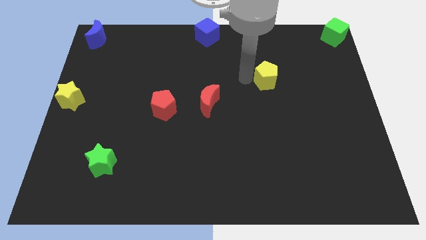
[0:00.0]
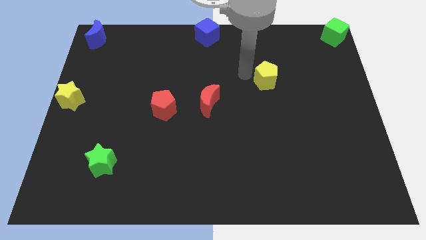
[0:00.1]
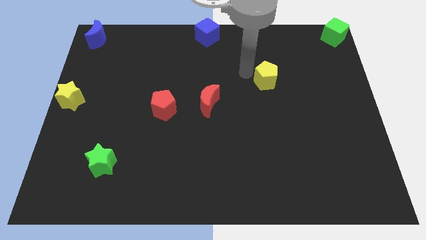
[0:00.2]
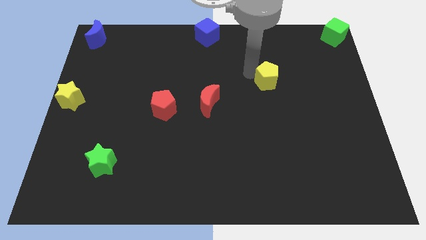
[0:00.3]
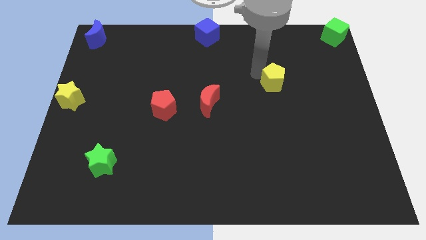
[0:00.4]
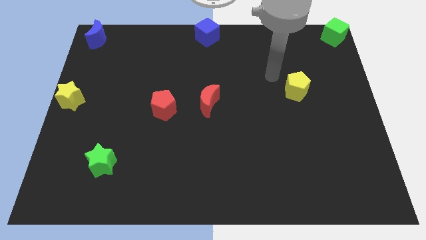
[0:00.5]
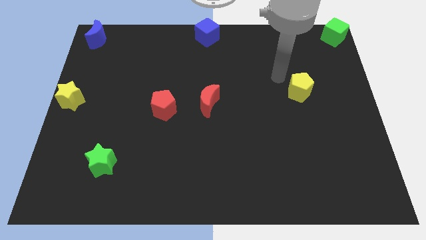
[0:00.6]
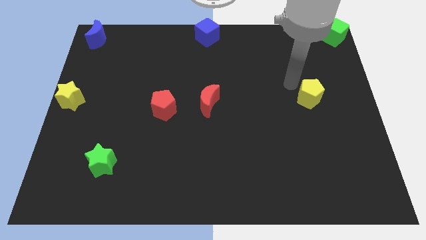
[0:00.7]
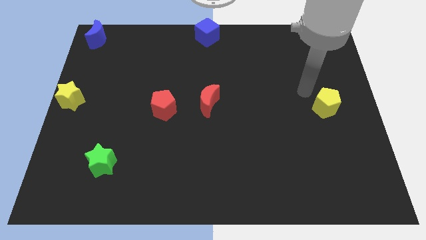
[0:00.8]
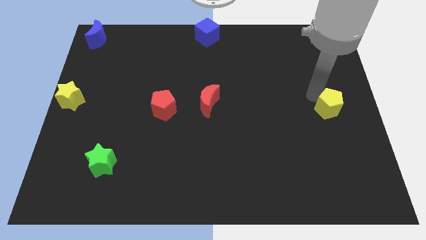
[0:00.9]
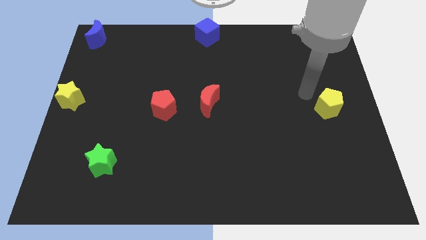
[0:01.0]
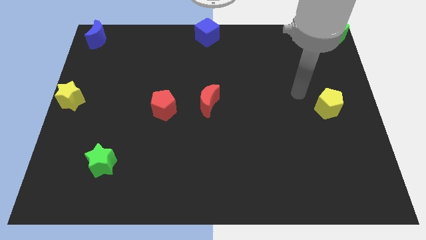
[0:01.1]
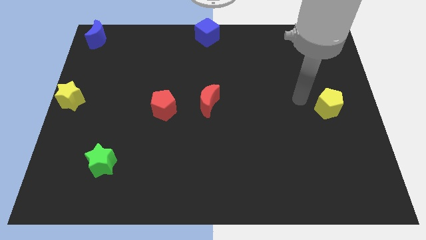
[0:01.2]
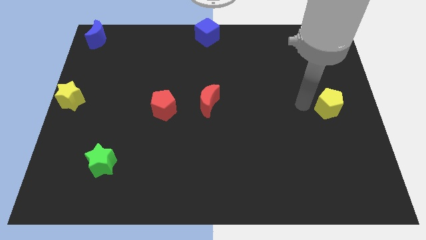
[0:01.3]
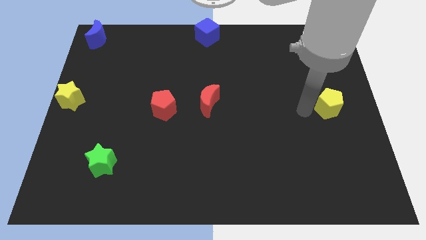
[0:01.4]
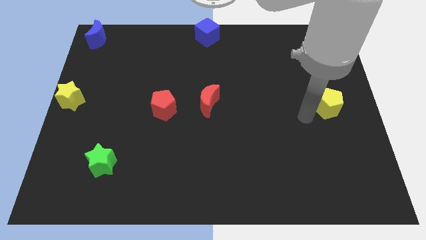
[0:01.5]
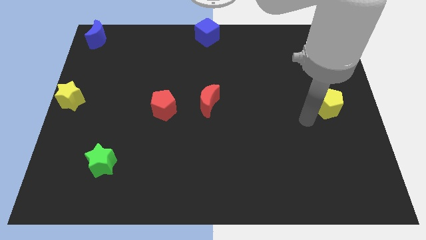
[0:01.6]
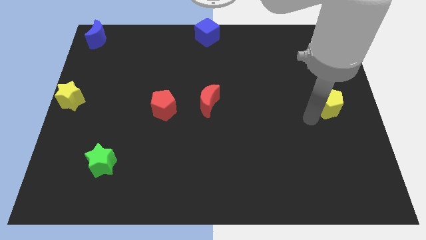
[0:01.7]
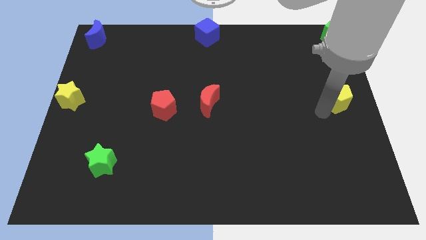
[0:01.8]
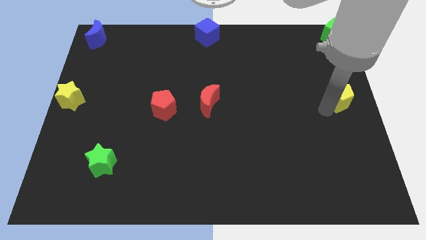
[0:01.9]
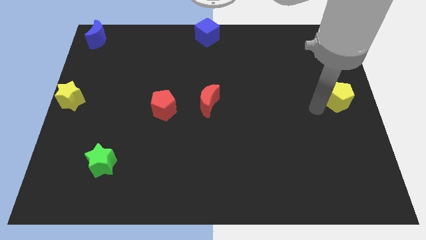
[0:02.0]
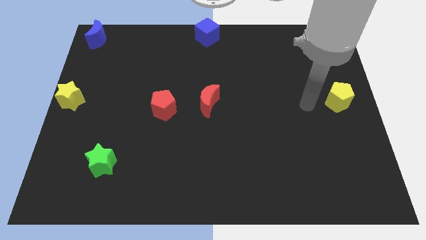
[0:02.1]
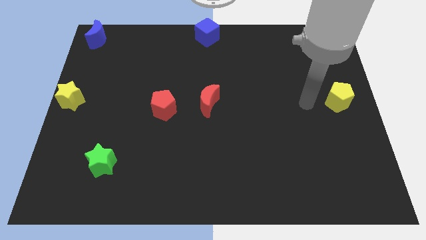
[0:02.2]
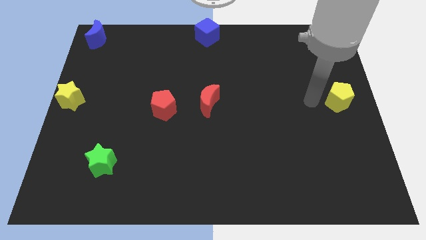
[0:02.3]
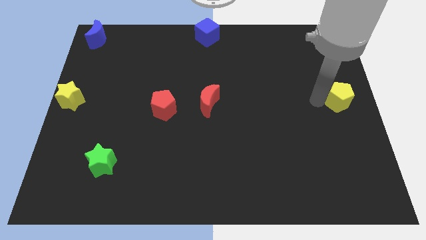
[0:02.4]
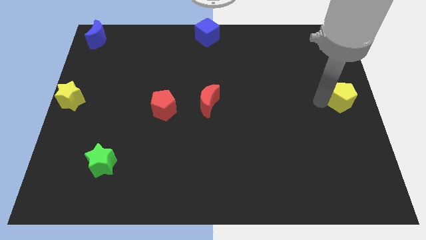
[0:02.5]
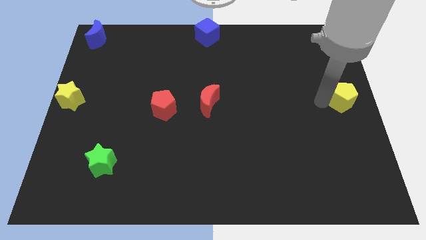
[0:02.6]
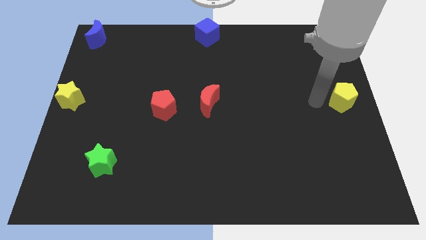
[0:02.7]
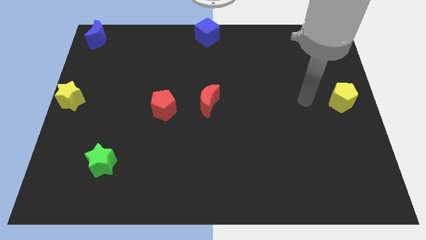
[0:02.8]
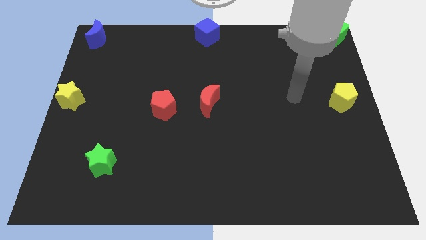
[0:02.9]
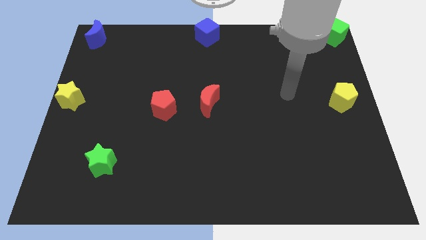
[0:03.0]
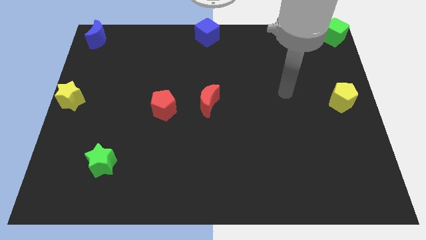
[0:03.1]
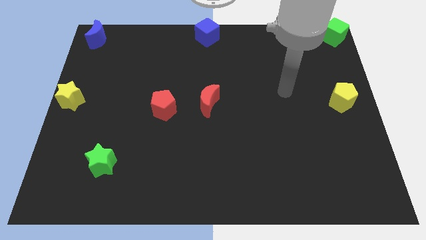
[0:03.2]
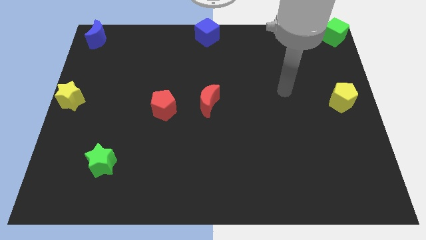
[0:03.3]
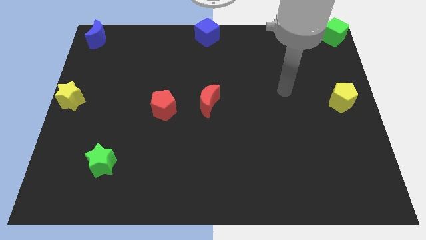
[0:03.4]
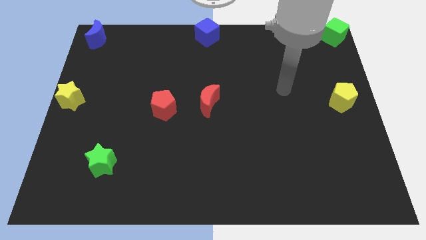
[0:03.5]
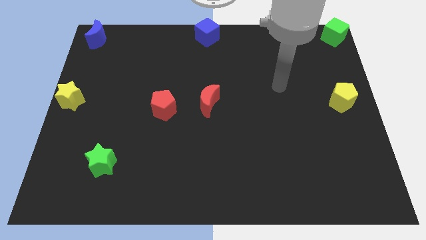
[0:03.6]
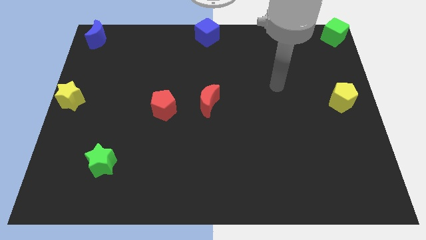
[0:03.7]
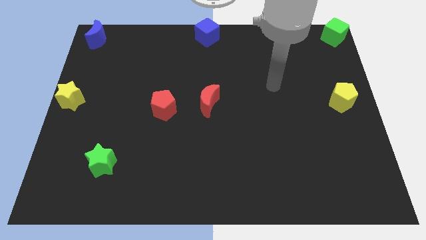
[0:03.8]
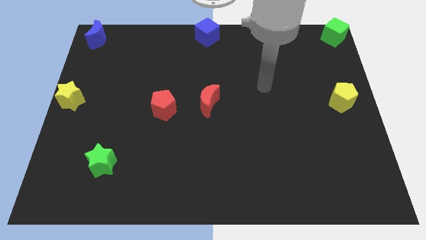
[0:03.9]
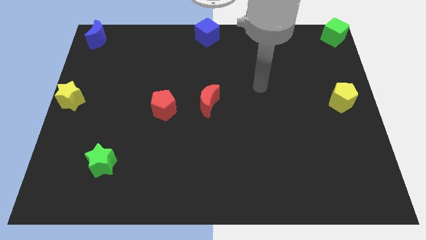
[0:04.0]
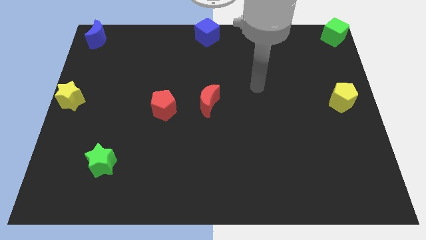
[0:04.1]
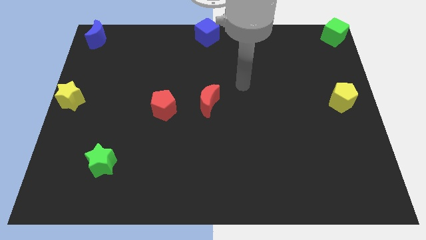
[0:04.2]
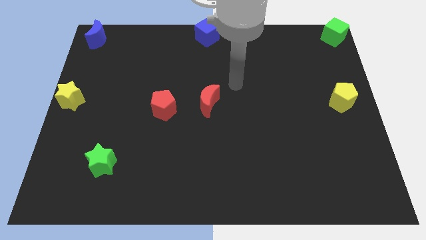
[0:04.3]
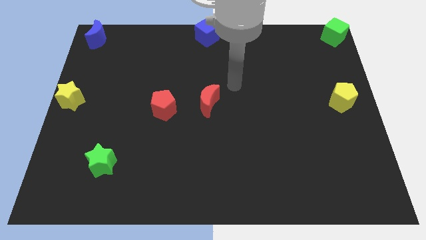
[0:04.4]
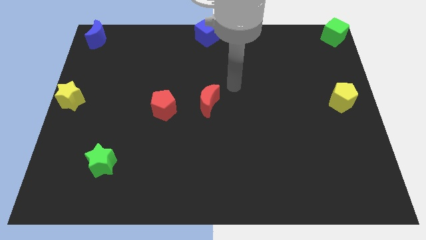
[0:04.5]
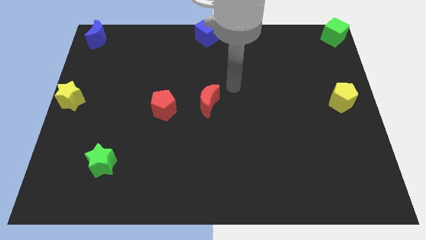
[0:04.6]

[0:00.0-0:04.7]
place the yellow pentagon on the centre right of the board

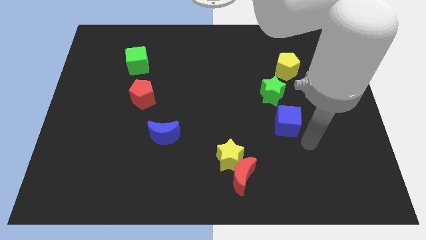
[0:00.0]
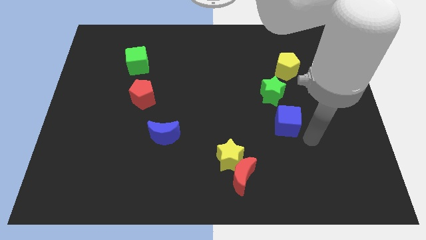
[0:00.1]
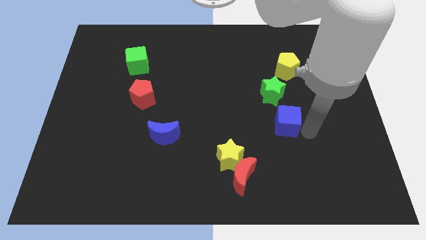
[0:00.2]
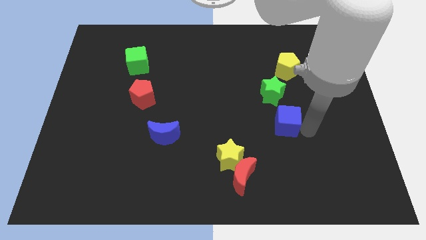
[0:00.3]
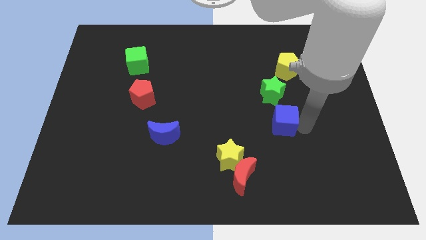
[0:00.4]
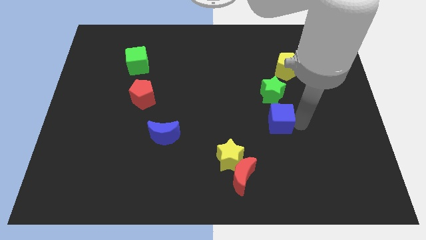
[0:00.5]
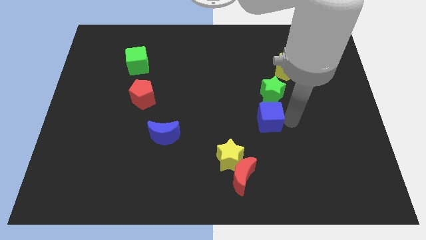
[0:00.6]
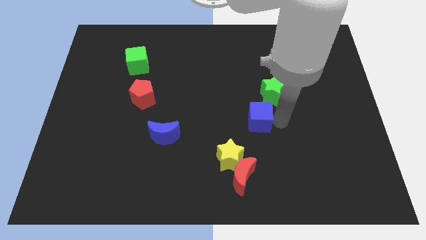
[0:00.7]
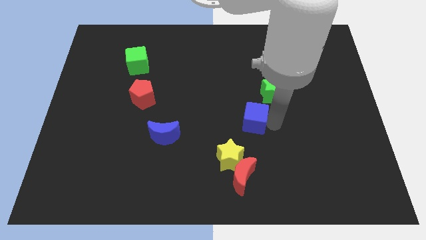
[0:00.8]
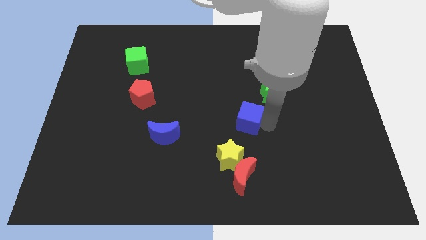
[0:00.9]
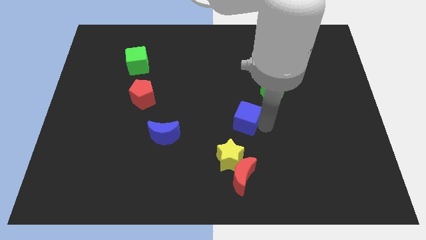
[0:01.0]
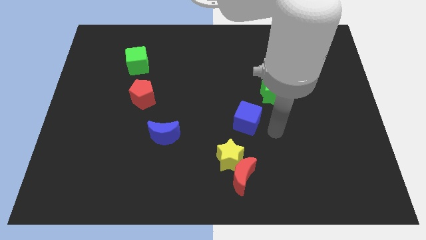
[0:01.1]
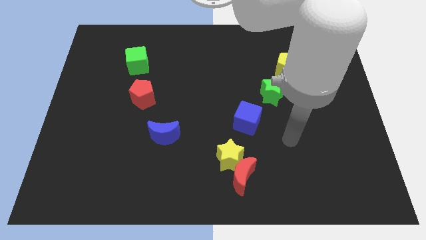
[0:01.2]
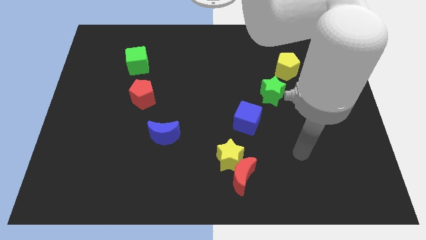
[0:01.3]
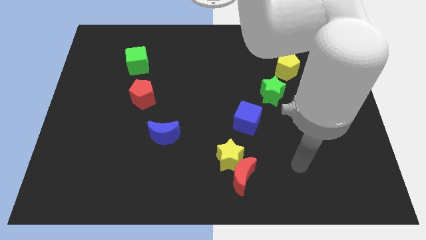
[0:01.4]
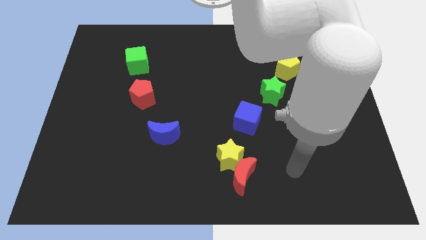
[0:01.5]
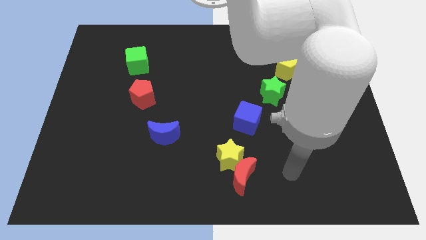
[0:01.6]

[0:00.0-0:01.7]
put the blue cube cube diagonally in between both the stars

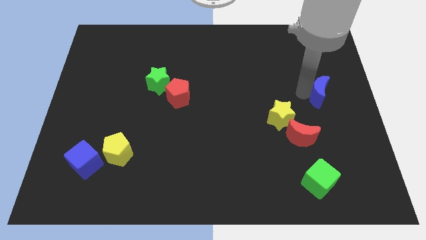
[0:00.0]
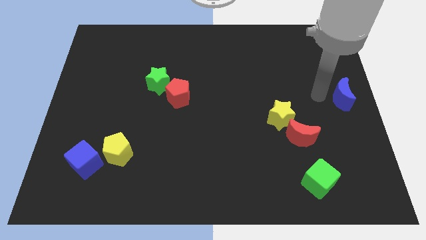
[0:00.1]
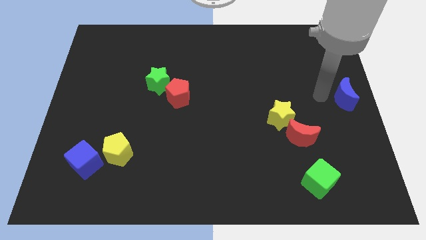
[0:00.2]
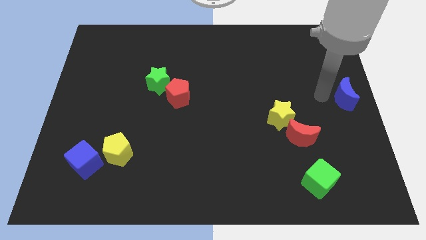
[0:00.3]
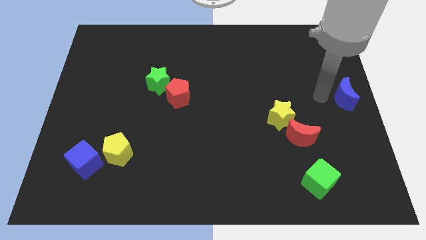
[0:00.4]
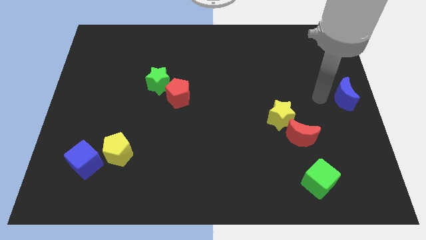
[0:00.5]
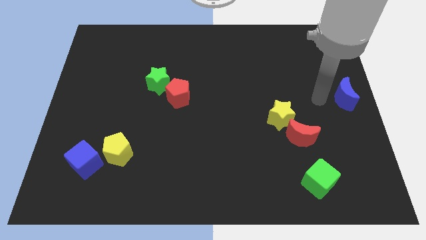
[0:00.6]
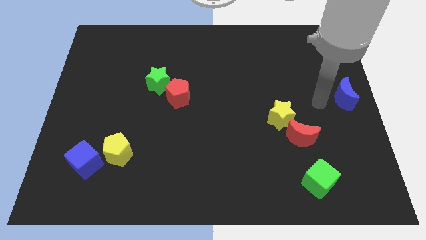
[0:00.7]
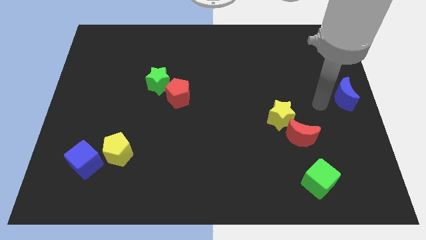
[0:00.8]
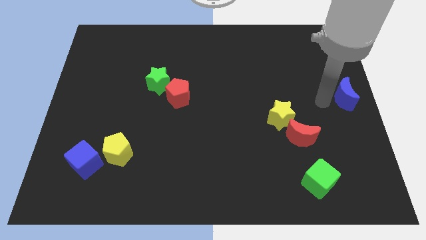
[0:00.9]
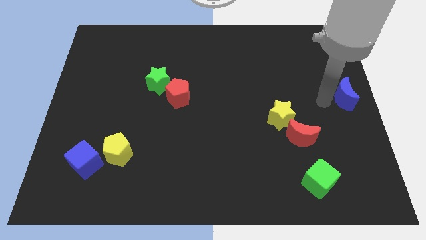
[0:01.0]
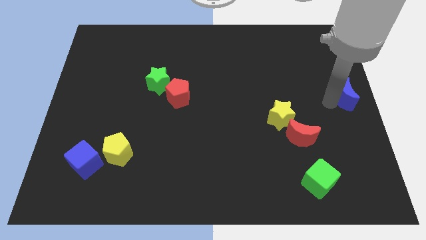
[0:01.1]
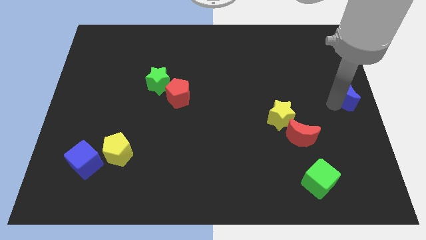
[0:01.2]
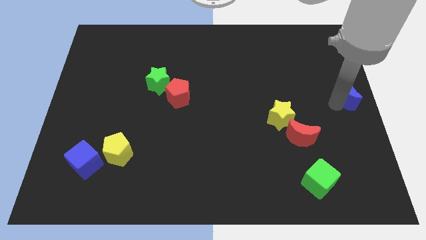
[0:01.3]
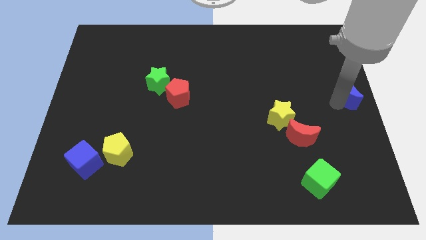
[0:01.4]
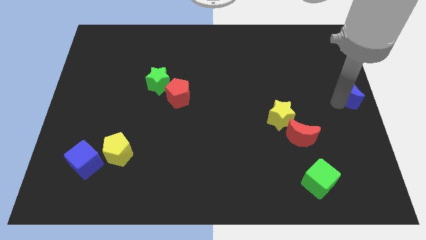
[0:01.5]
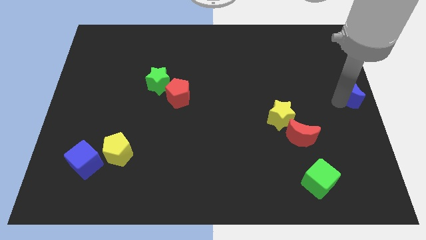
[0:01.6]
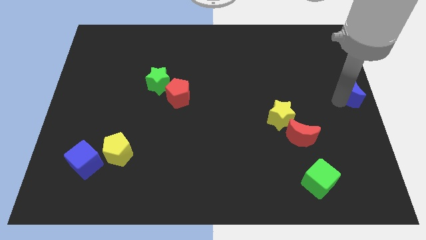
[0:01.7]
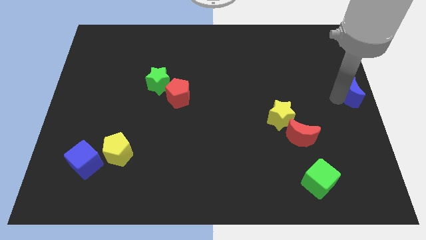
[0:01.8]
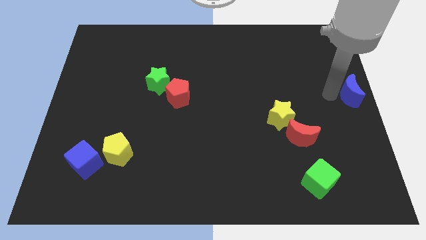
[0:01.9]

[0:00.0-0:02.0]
push the blue moon to the right side of the board

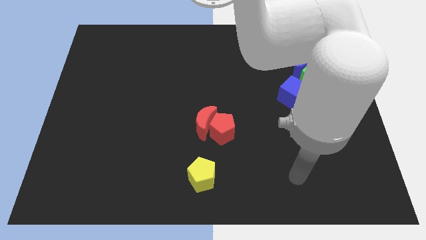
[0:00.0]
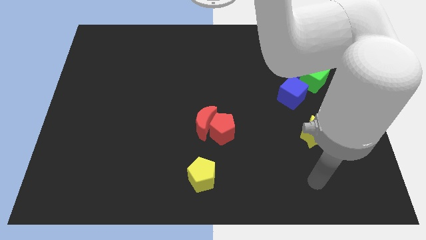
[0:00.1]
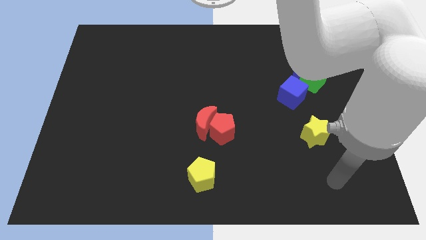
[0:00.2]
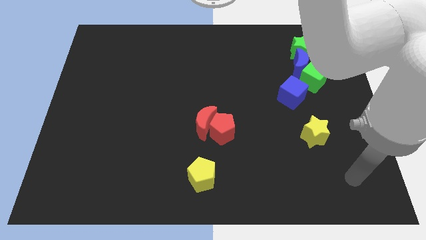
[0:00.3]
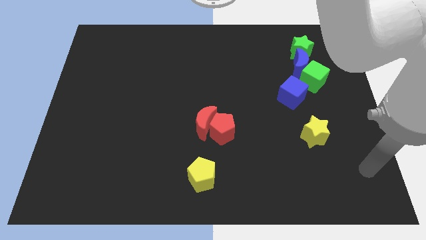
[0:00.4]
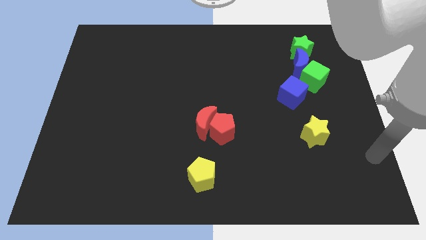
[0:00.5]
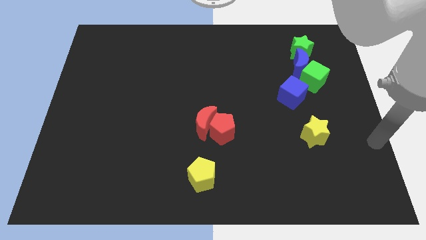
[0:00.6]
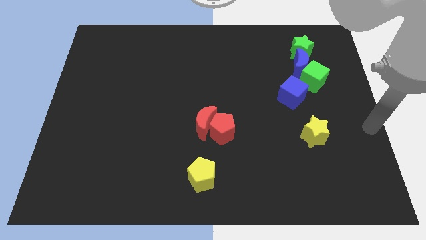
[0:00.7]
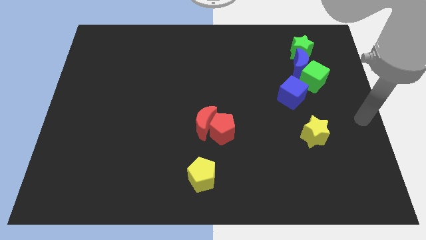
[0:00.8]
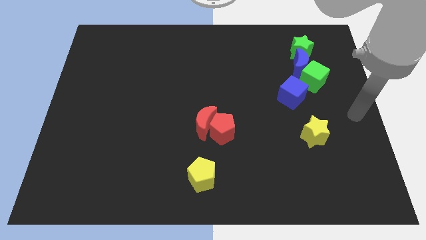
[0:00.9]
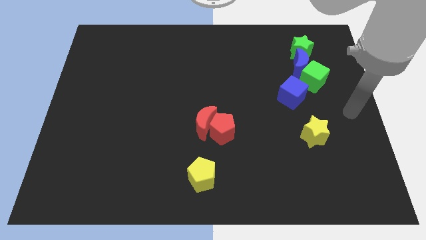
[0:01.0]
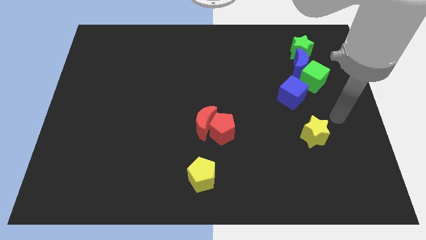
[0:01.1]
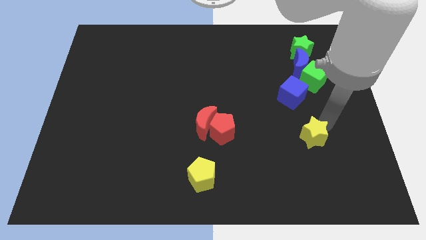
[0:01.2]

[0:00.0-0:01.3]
slide your arm towards the yellow star
